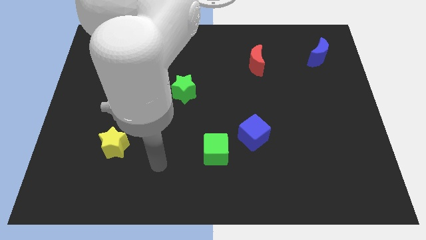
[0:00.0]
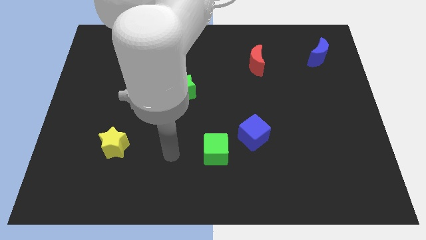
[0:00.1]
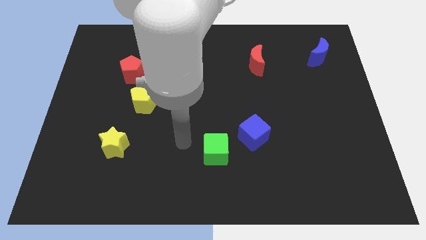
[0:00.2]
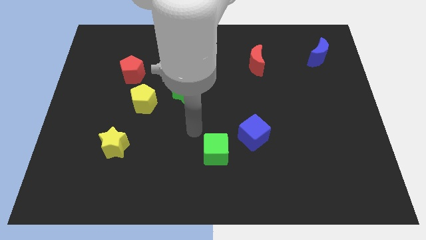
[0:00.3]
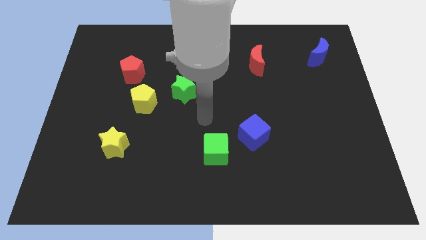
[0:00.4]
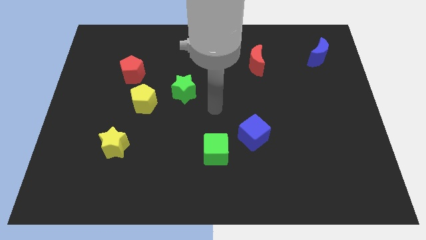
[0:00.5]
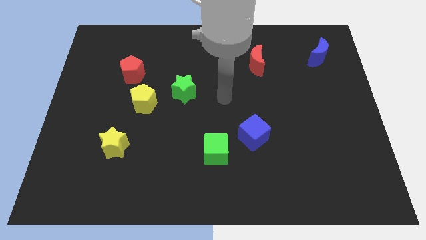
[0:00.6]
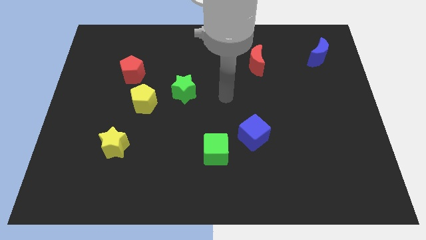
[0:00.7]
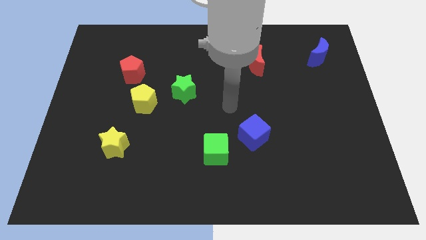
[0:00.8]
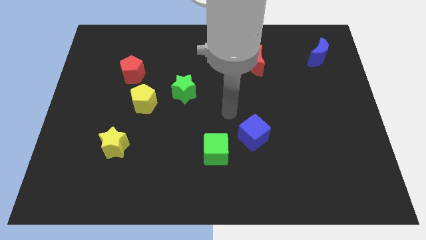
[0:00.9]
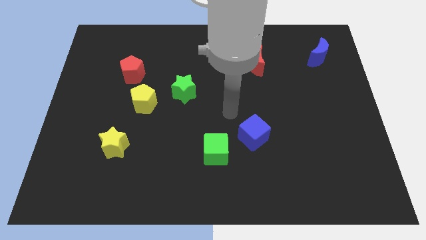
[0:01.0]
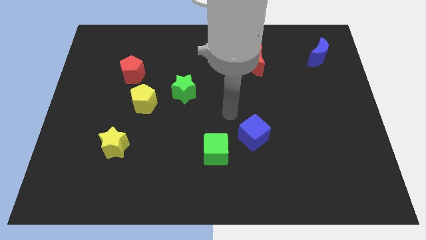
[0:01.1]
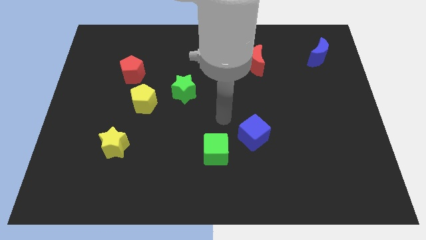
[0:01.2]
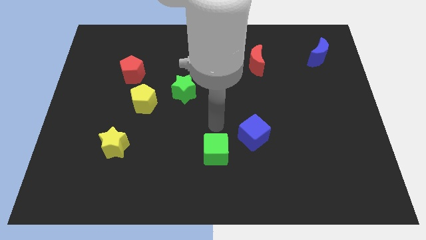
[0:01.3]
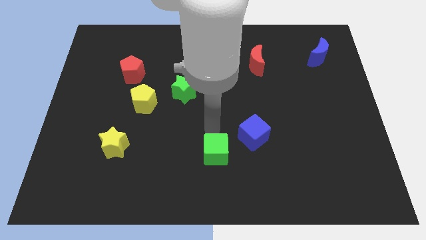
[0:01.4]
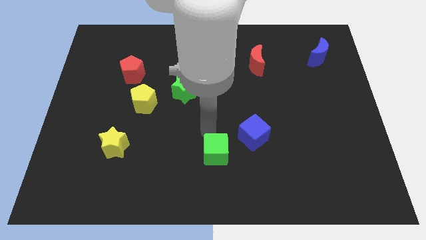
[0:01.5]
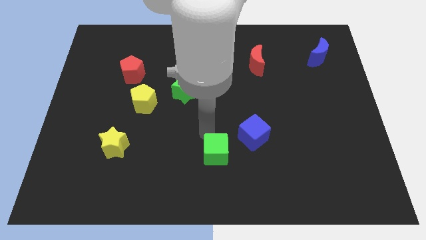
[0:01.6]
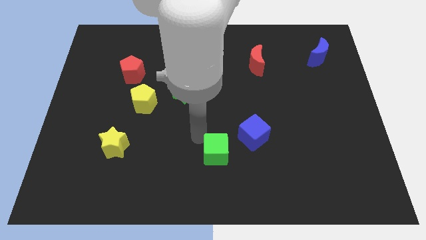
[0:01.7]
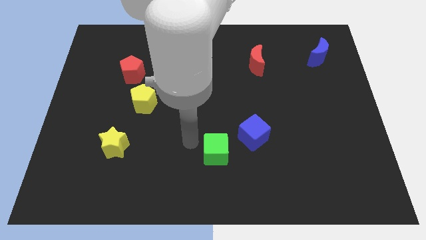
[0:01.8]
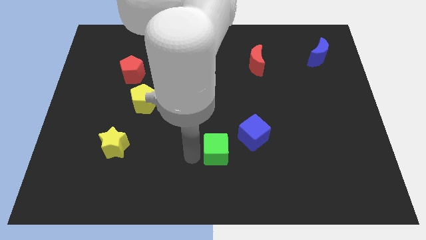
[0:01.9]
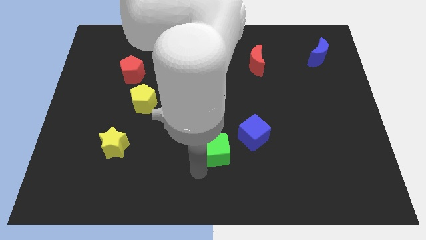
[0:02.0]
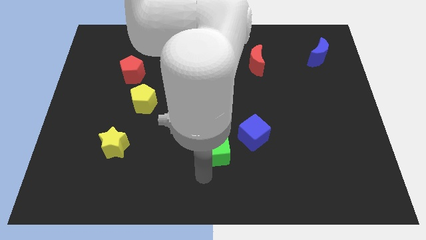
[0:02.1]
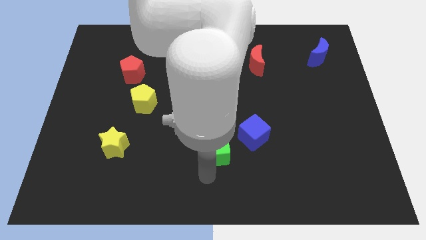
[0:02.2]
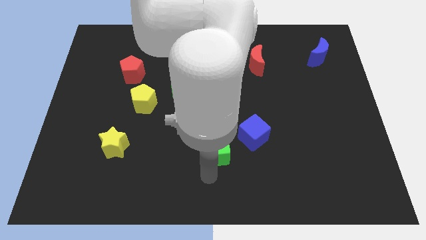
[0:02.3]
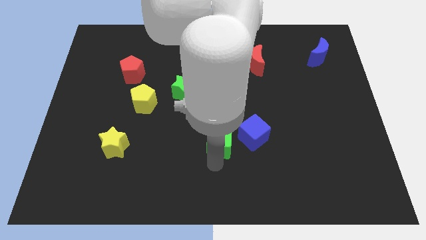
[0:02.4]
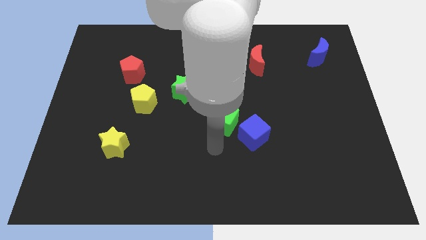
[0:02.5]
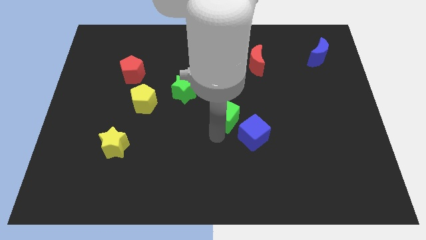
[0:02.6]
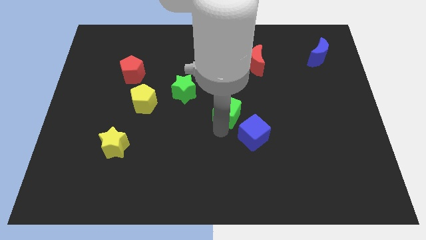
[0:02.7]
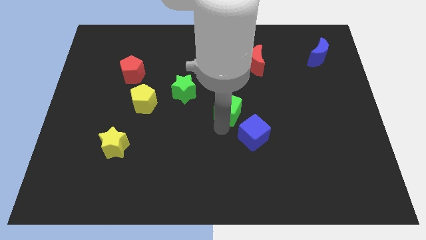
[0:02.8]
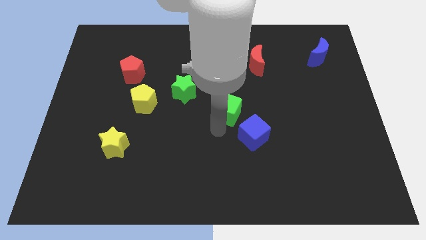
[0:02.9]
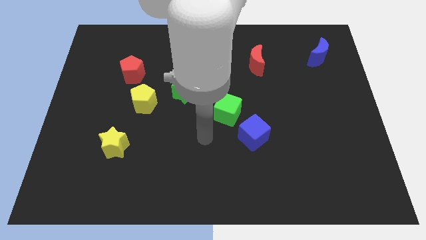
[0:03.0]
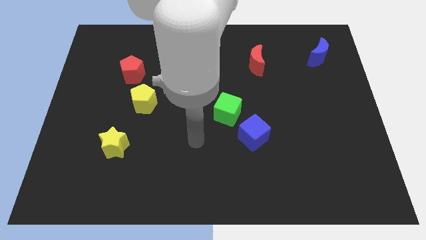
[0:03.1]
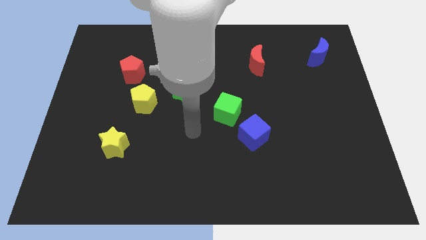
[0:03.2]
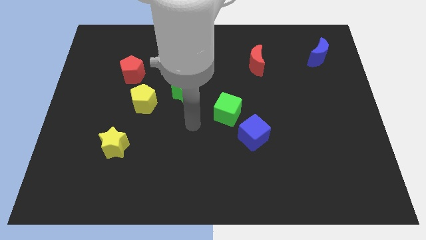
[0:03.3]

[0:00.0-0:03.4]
push the green cube to the top left side of the blue cube

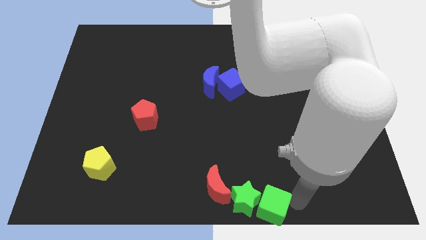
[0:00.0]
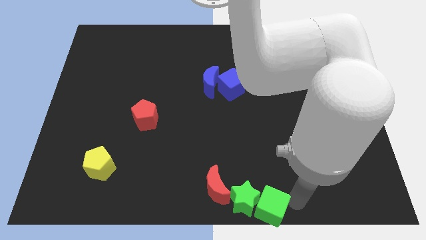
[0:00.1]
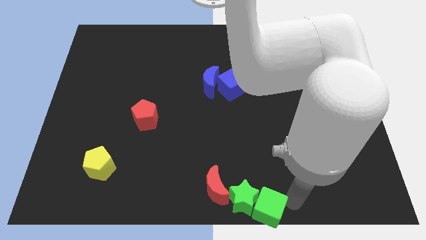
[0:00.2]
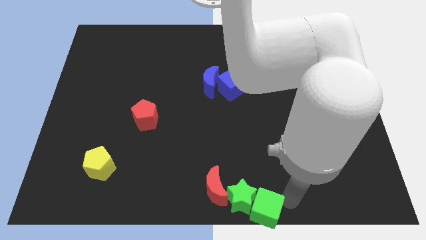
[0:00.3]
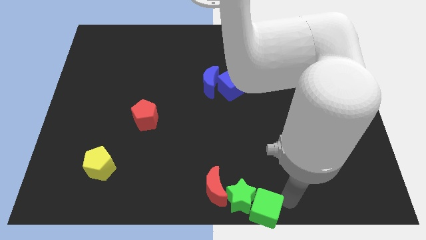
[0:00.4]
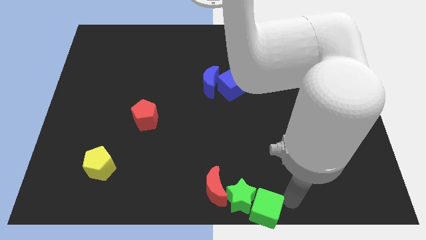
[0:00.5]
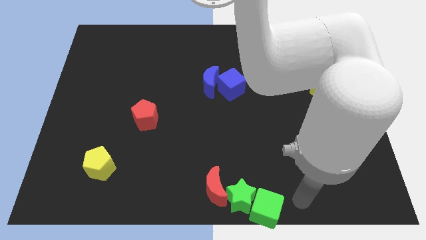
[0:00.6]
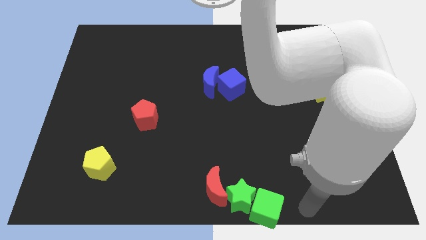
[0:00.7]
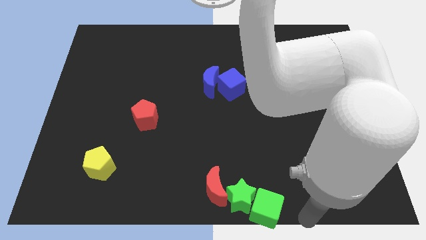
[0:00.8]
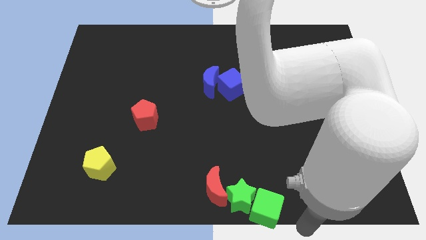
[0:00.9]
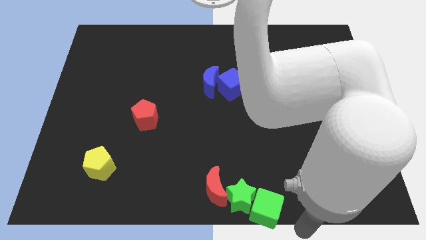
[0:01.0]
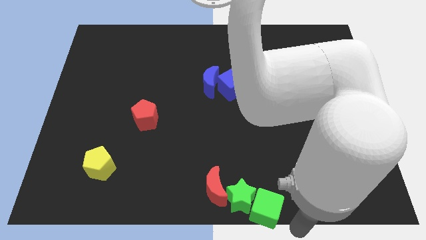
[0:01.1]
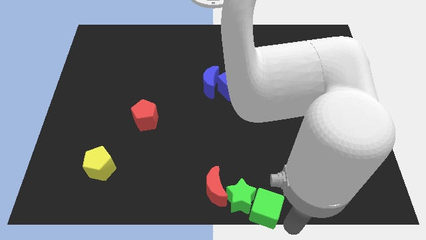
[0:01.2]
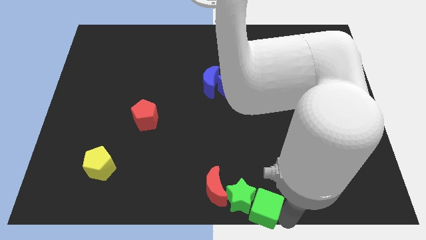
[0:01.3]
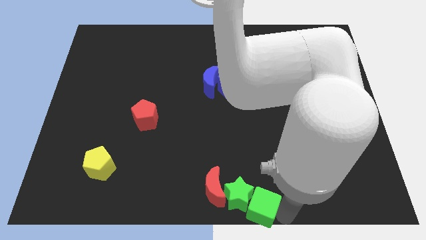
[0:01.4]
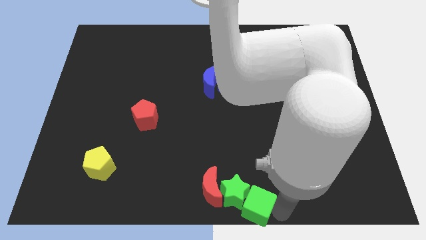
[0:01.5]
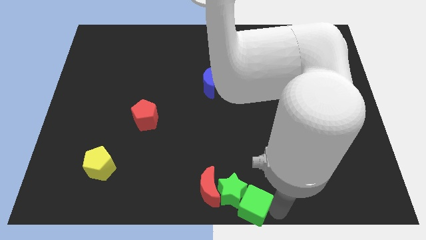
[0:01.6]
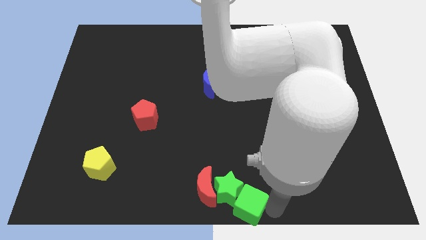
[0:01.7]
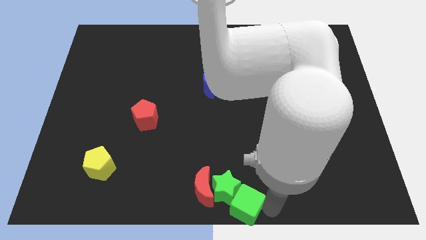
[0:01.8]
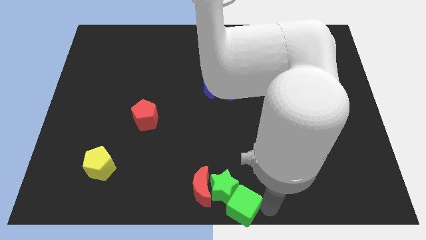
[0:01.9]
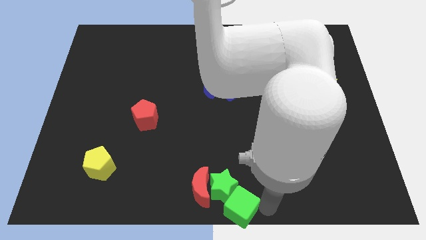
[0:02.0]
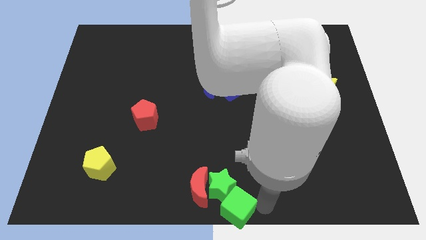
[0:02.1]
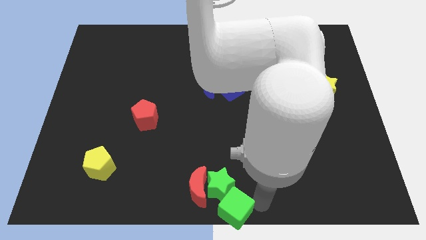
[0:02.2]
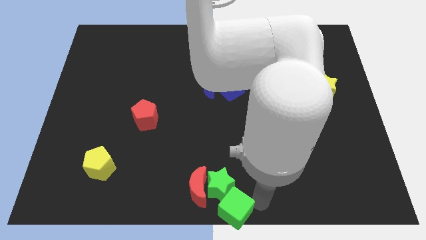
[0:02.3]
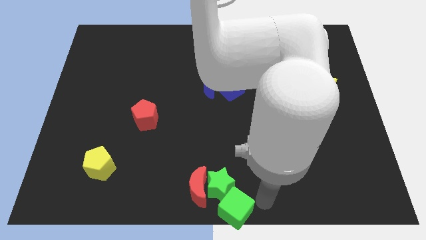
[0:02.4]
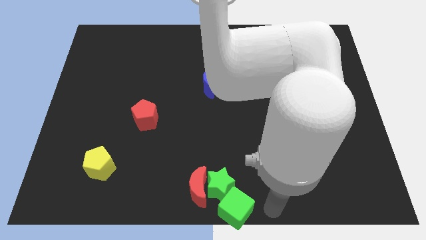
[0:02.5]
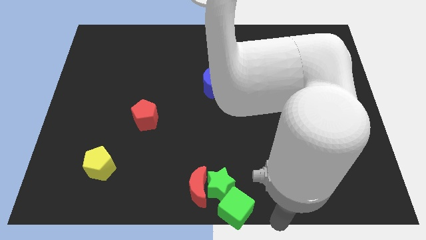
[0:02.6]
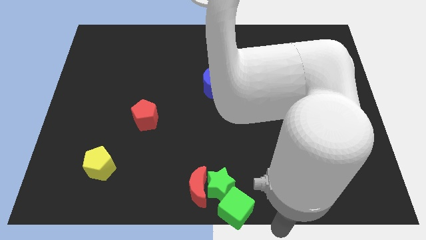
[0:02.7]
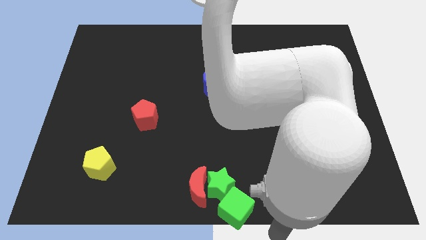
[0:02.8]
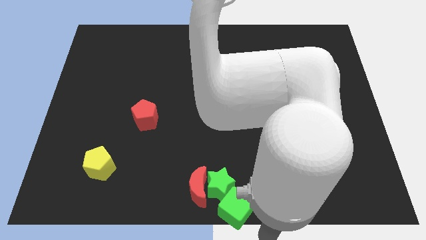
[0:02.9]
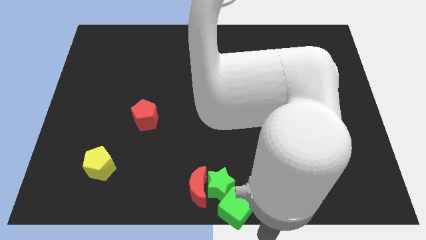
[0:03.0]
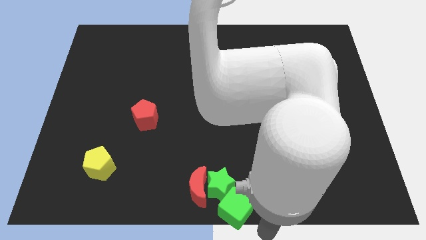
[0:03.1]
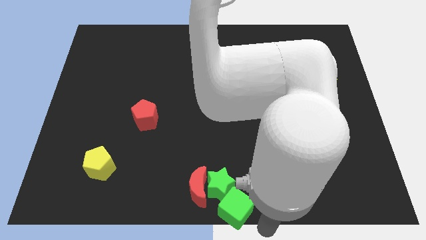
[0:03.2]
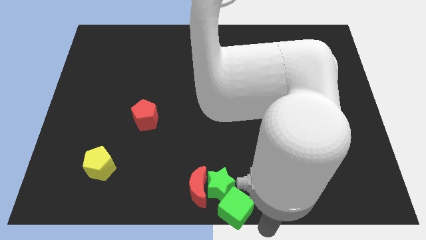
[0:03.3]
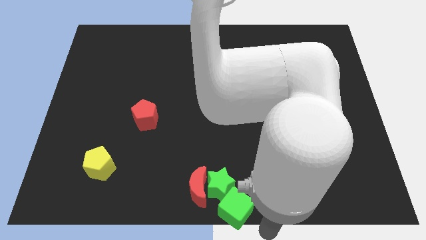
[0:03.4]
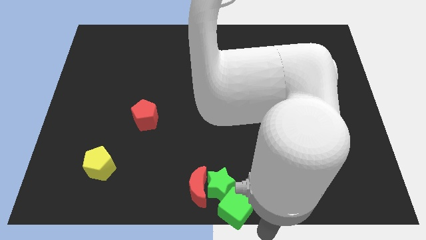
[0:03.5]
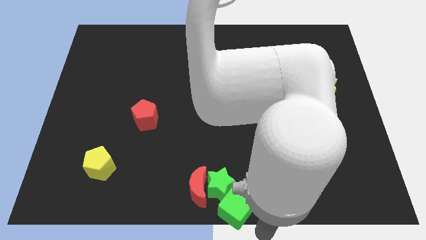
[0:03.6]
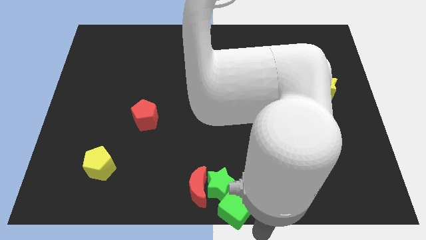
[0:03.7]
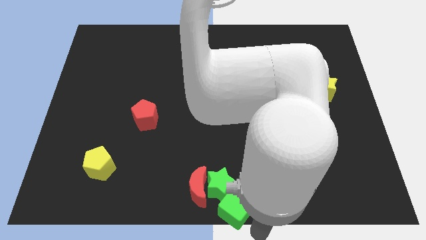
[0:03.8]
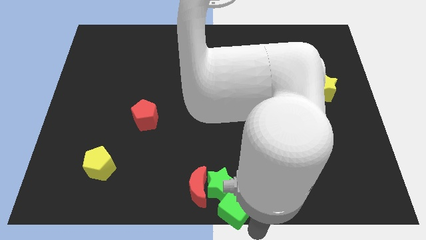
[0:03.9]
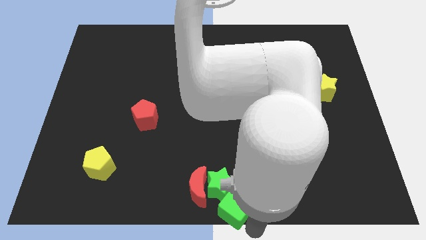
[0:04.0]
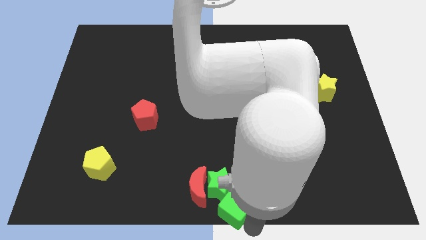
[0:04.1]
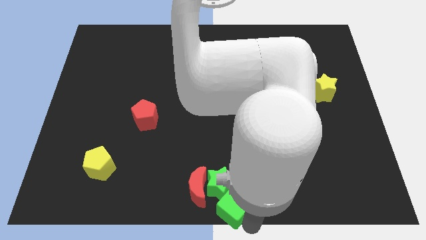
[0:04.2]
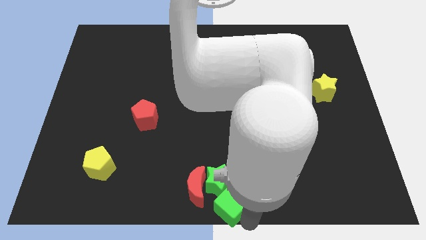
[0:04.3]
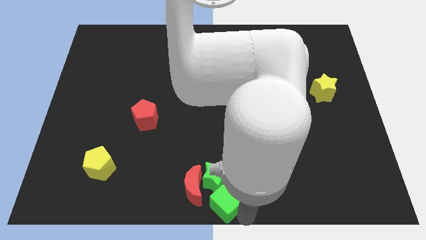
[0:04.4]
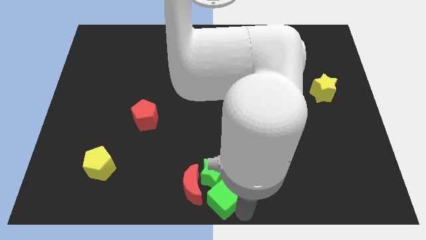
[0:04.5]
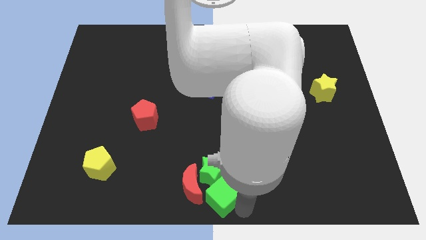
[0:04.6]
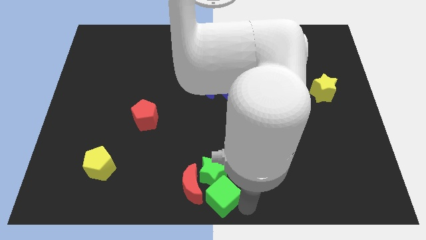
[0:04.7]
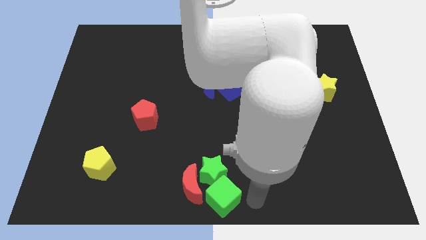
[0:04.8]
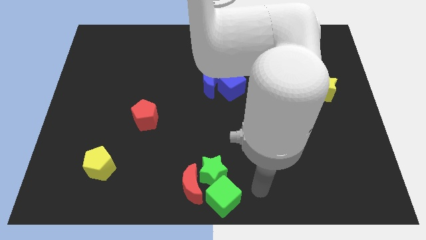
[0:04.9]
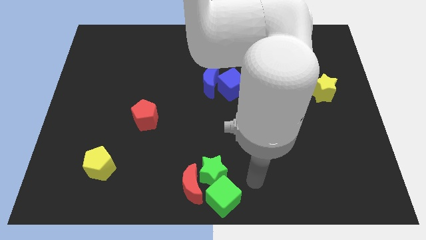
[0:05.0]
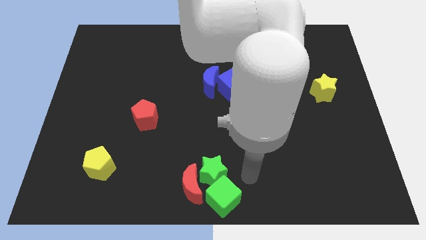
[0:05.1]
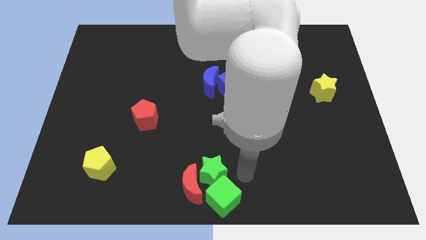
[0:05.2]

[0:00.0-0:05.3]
push the green star along with the green cube into the red crescent

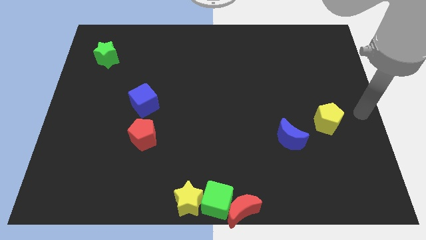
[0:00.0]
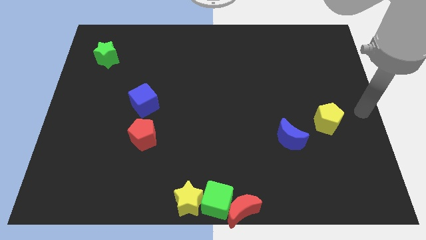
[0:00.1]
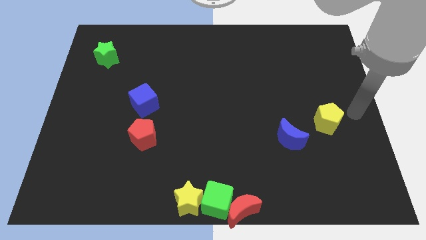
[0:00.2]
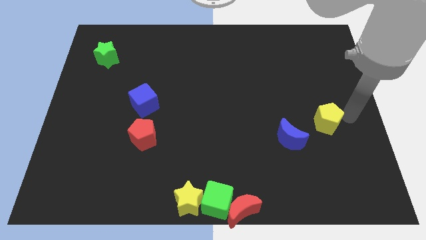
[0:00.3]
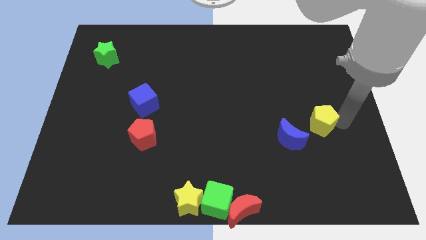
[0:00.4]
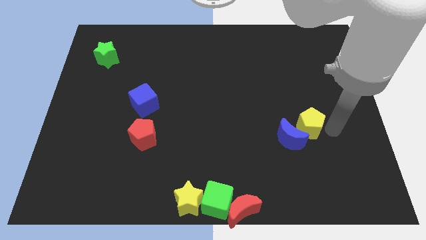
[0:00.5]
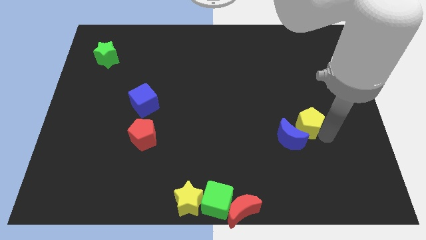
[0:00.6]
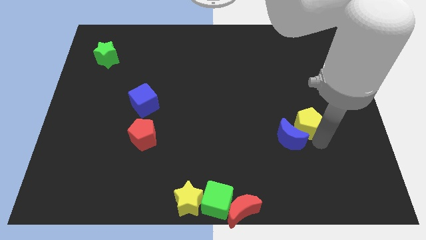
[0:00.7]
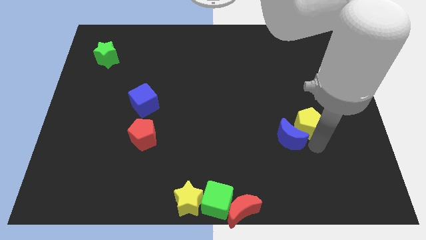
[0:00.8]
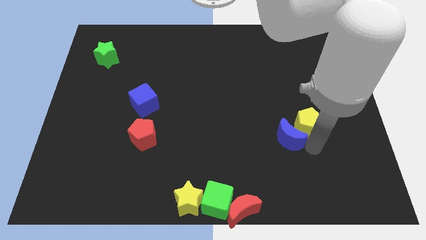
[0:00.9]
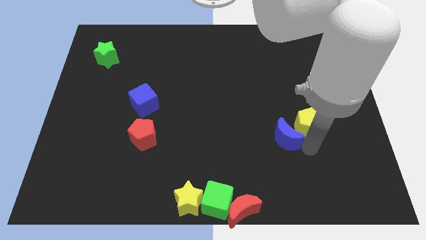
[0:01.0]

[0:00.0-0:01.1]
slide the yellow pentagon close to the blue moon
